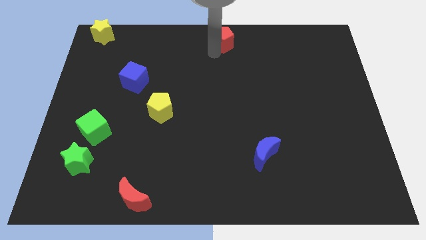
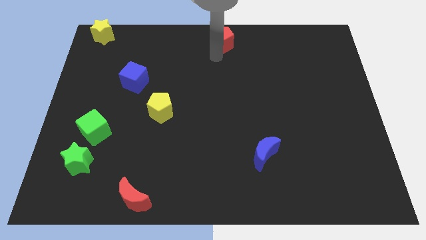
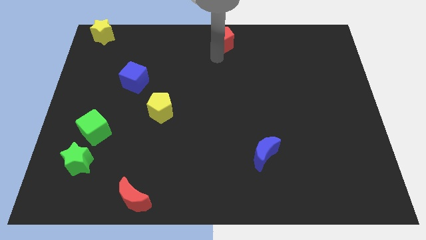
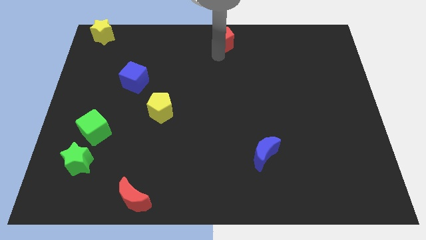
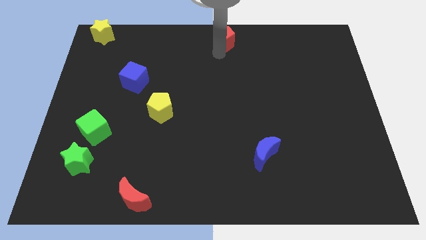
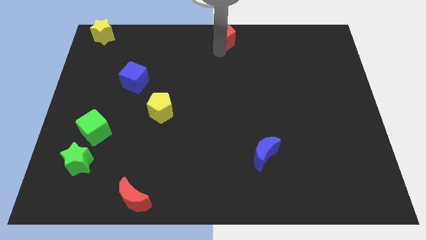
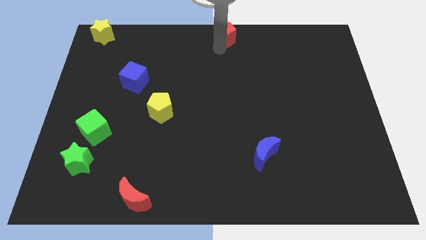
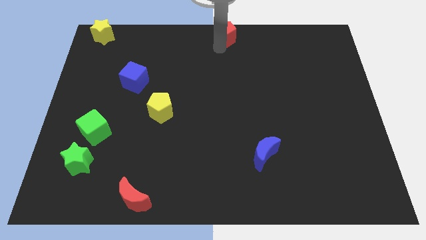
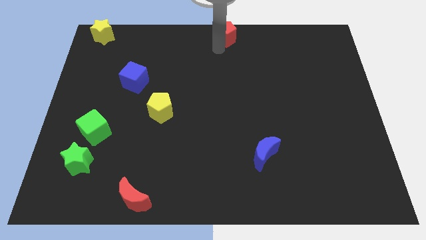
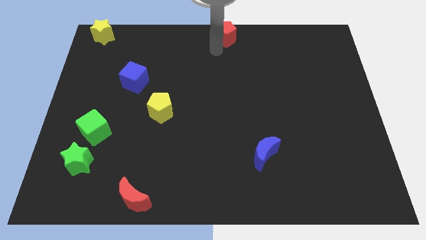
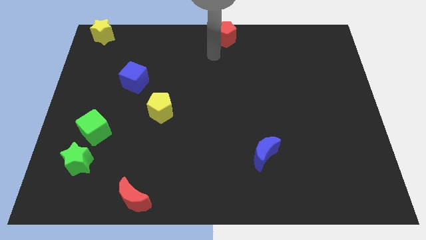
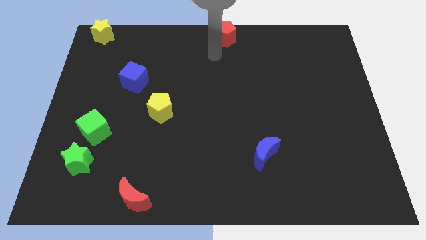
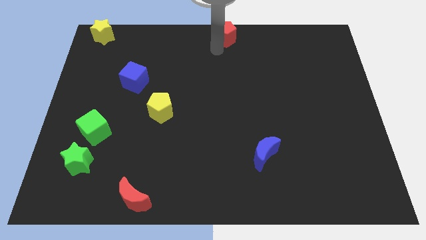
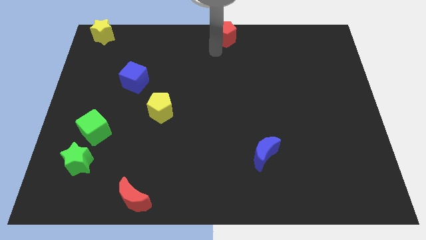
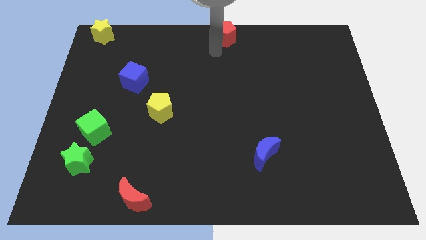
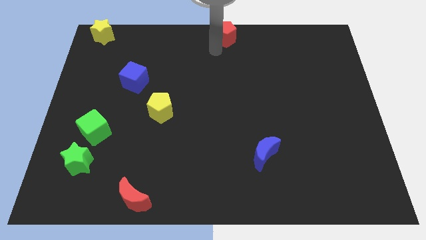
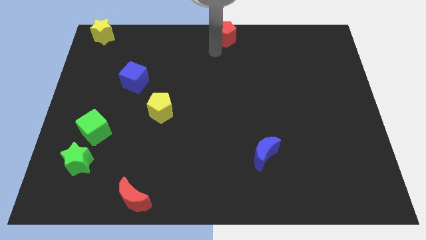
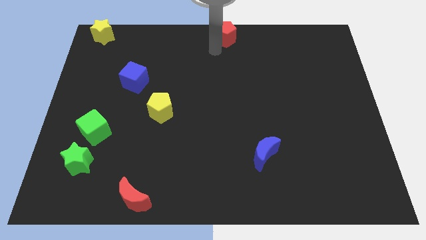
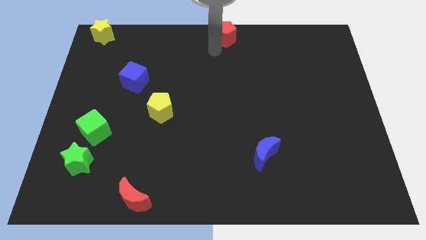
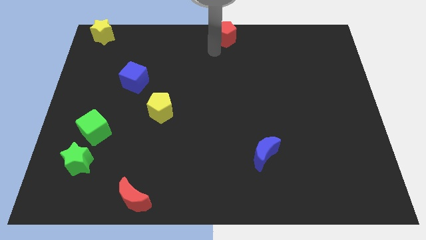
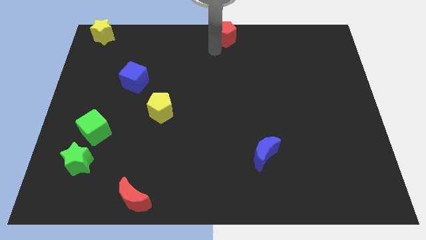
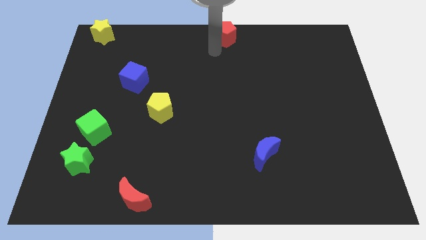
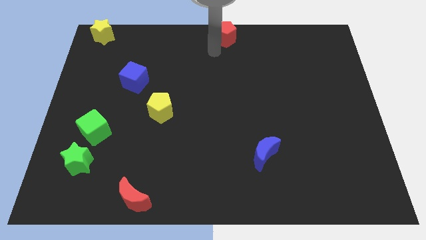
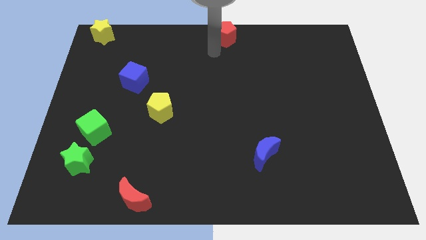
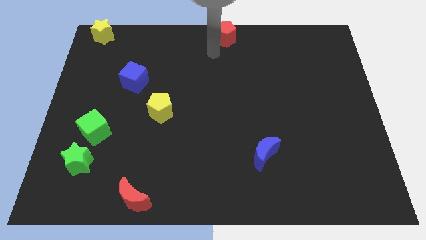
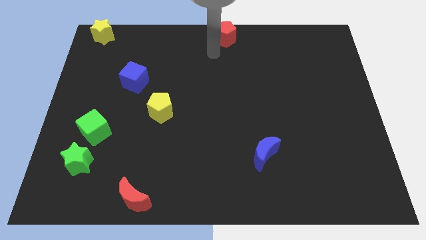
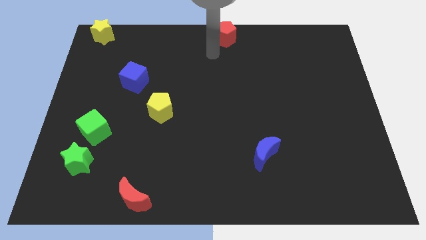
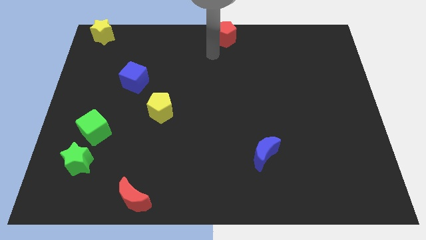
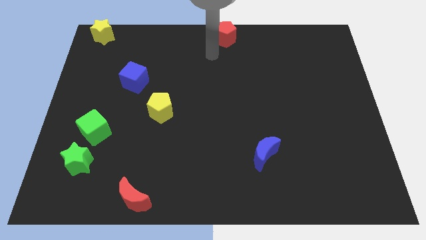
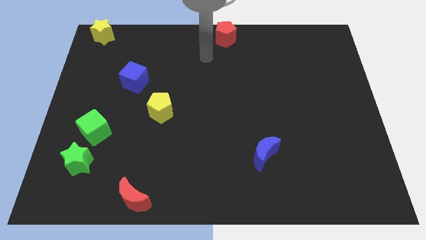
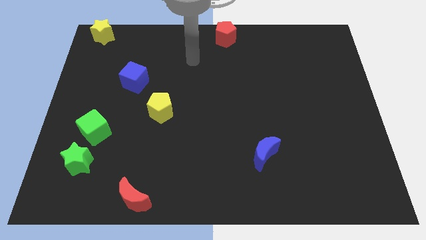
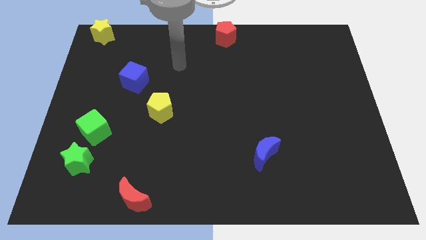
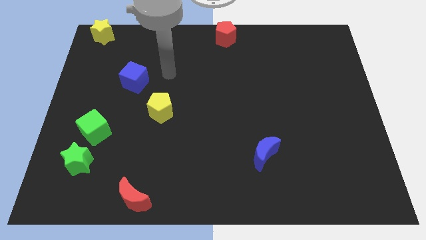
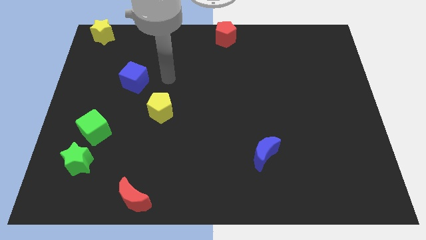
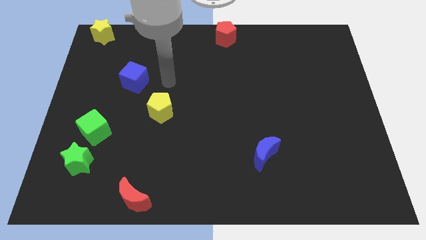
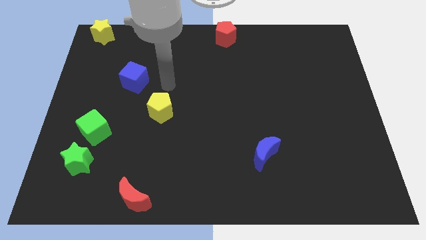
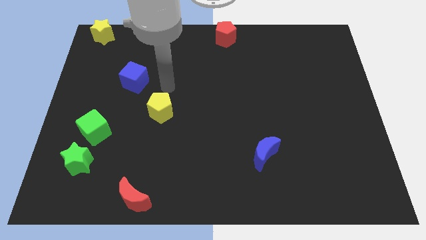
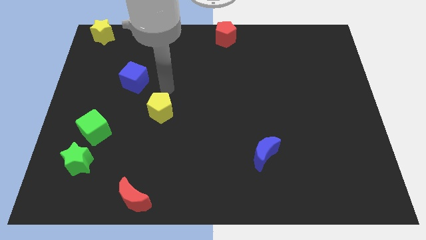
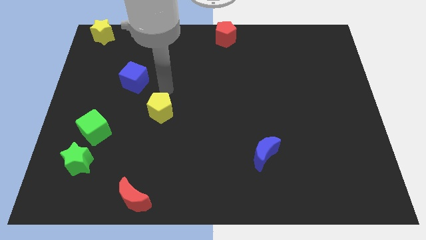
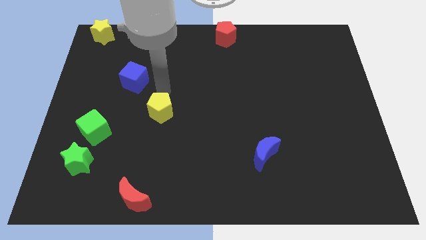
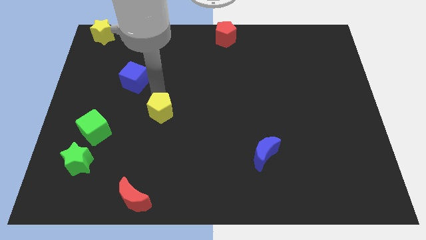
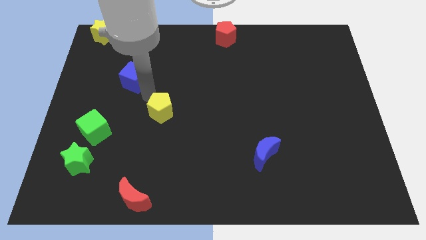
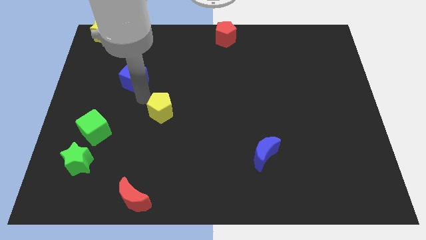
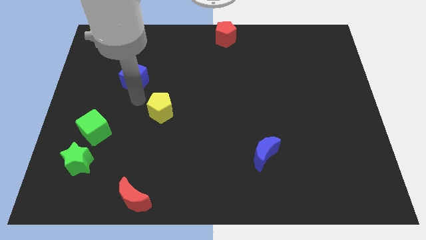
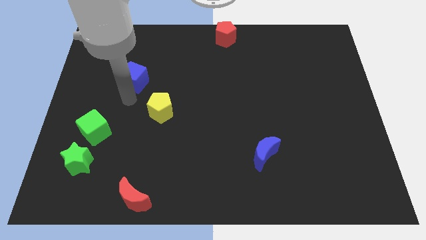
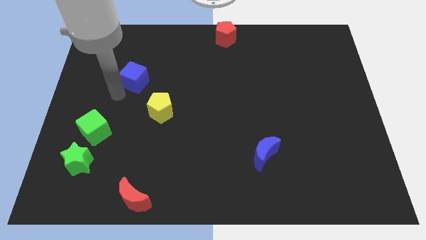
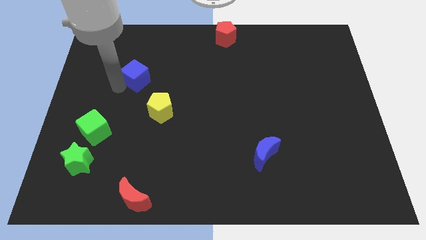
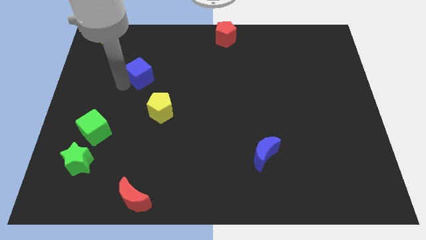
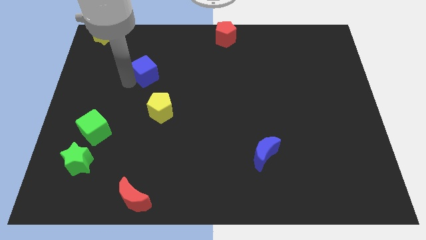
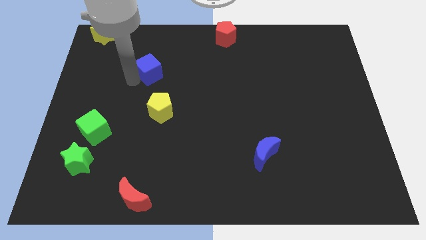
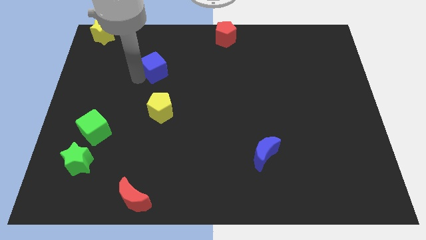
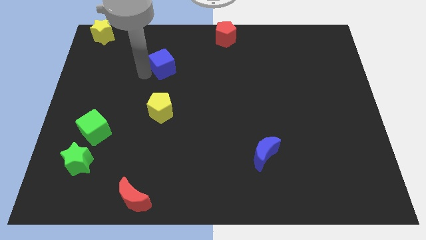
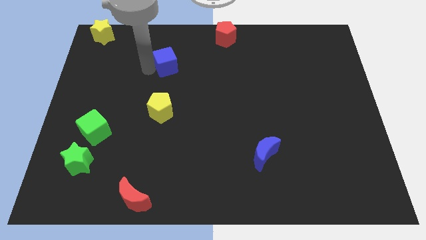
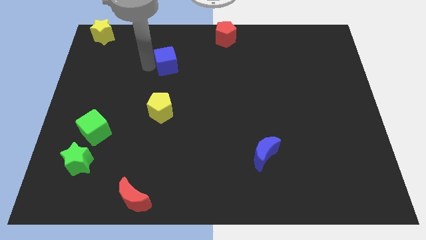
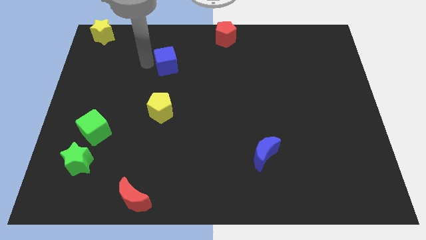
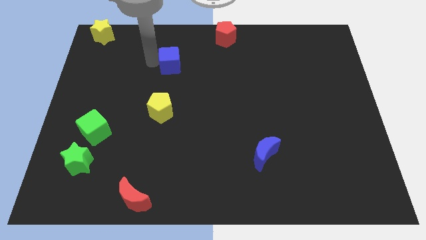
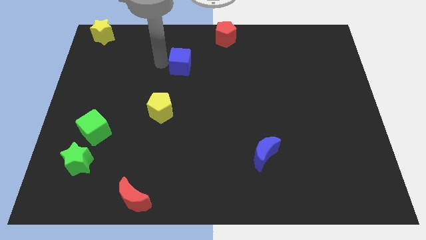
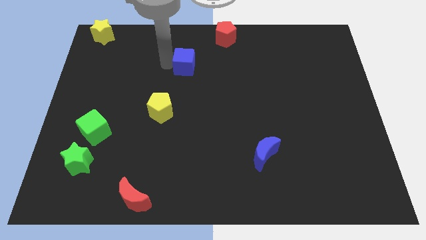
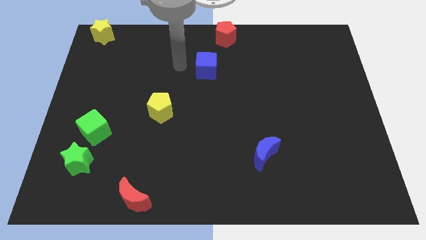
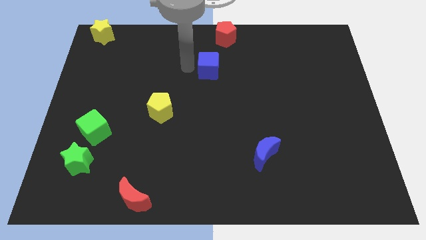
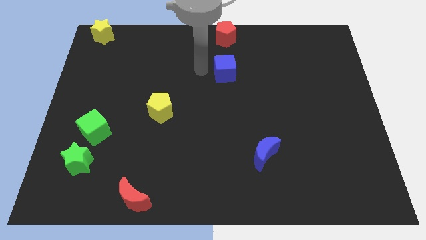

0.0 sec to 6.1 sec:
move blue cube below the red pentagon

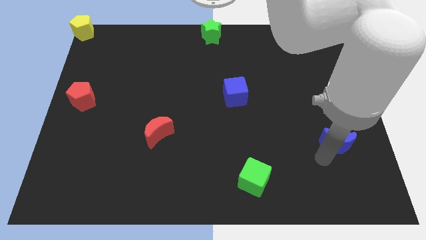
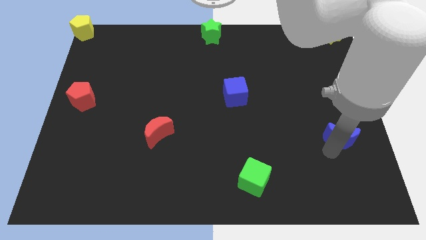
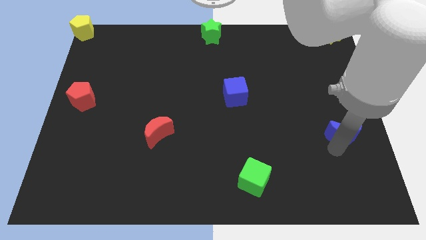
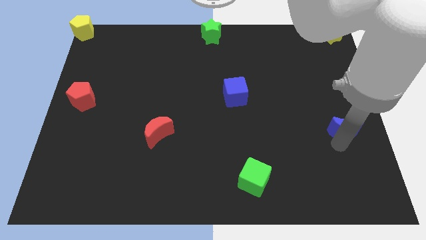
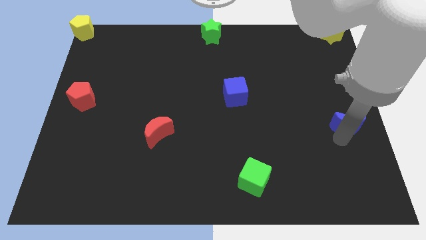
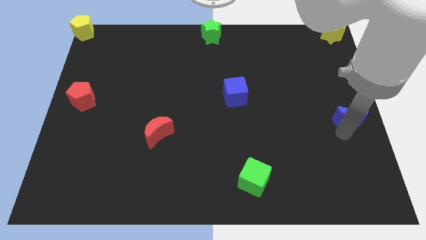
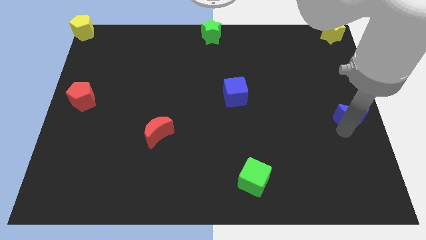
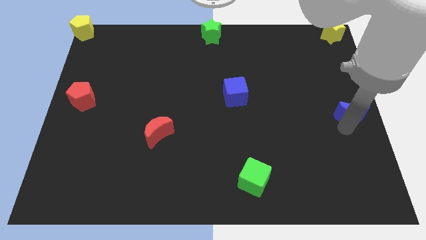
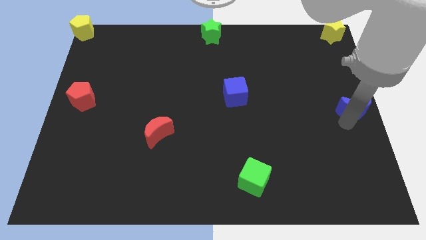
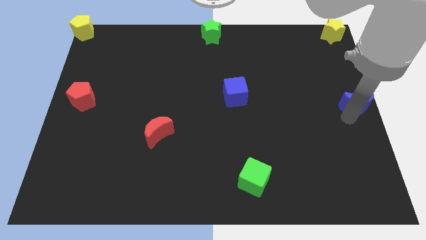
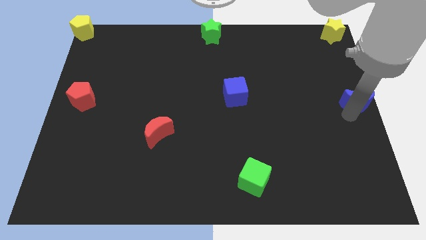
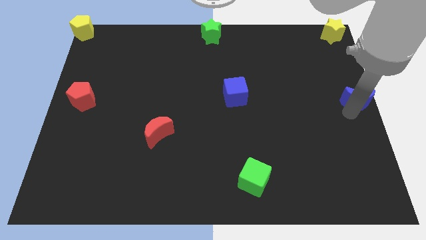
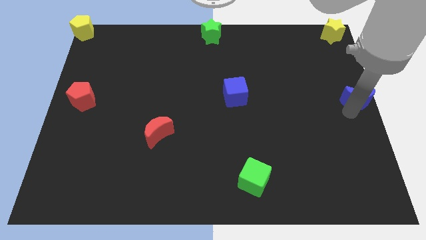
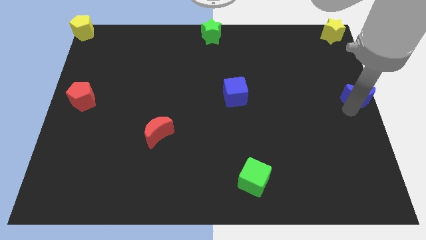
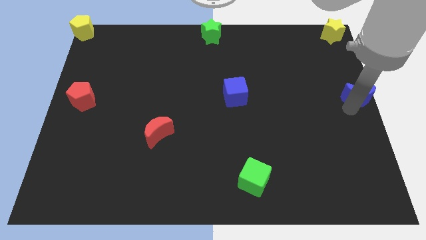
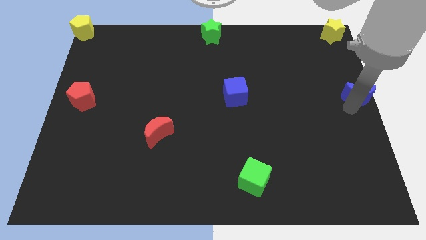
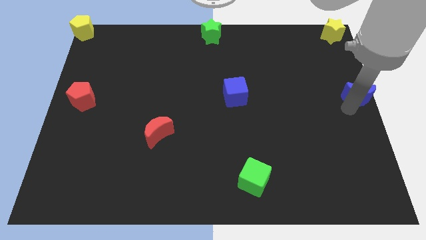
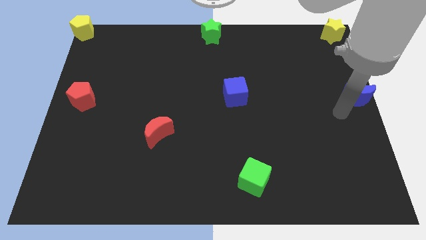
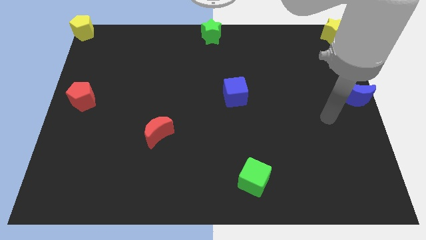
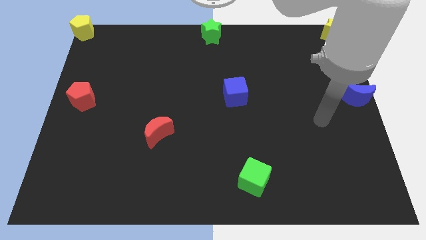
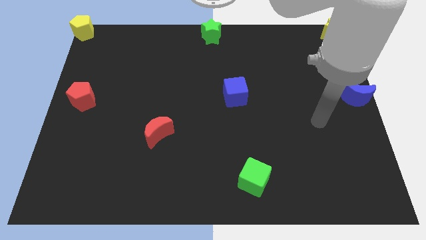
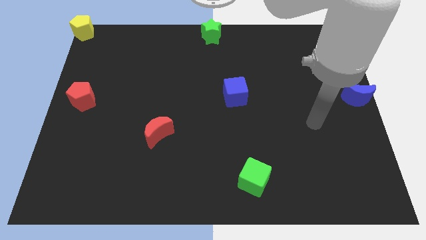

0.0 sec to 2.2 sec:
move the blue moon to the right center of the board

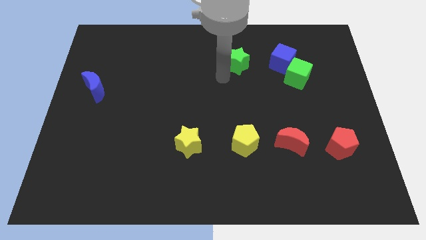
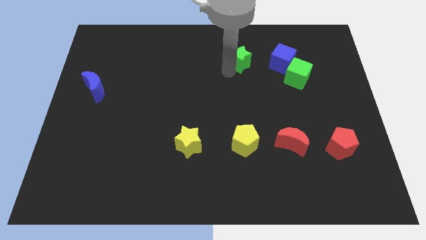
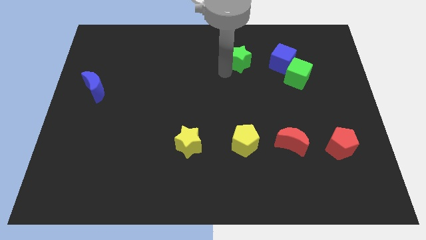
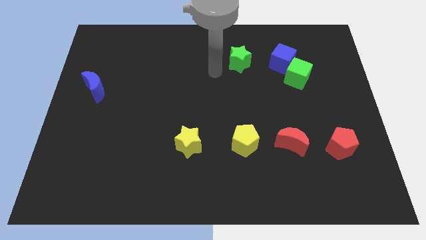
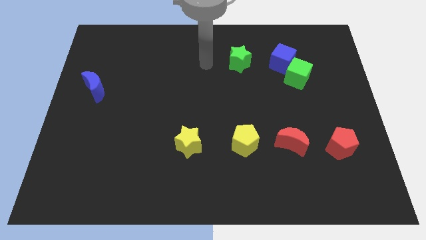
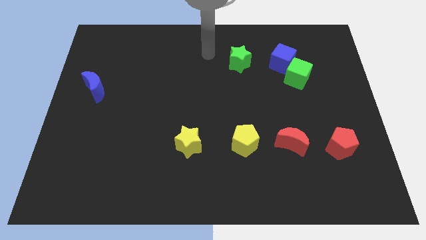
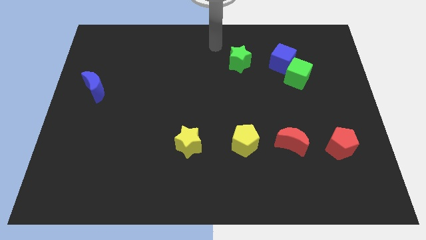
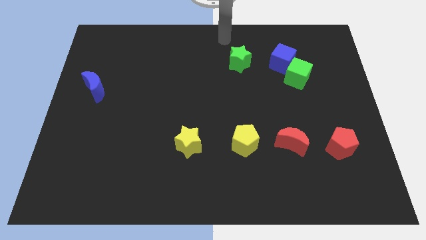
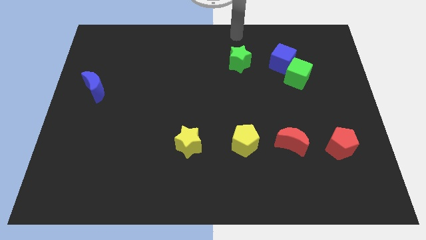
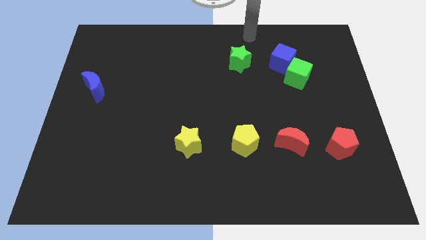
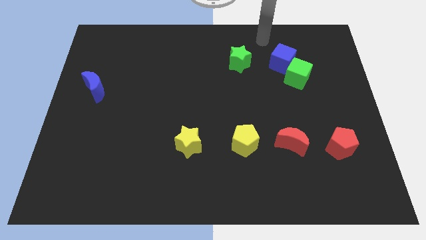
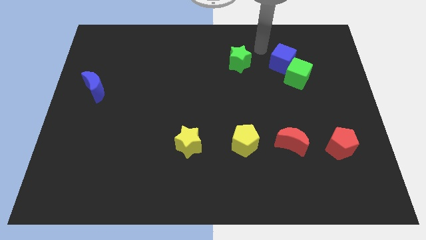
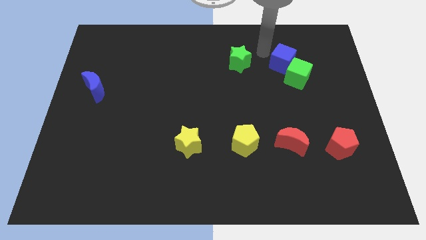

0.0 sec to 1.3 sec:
move the green star slightly towards the top right of the board
